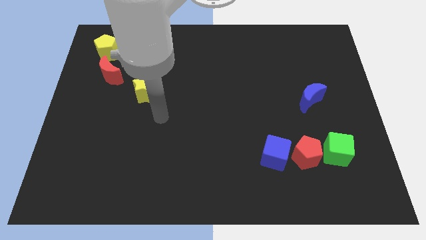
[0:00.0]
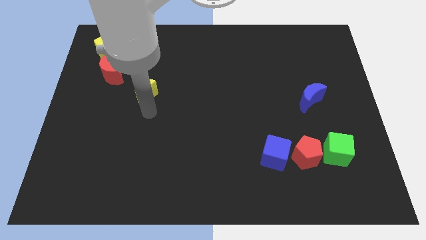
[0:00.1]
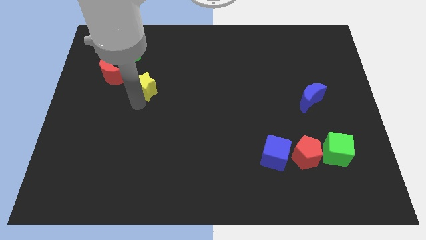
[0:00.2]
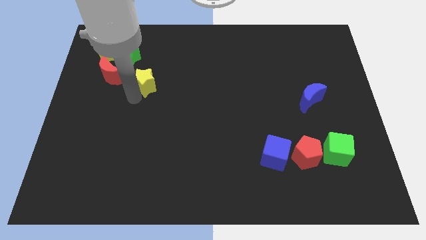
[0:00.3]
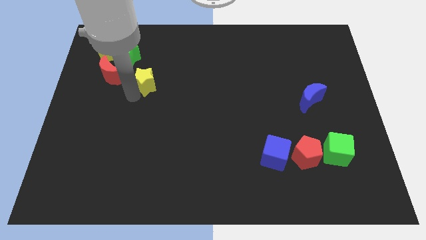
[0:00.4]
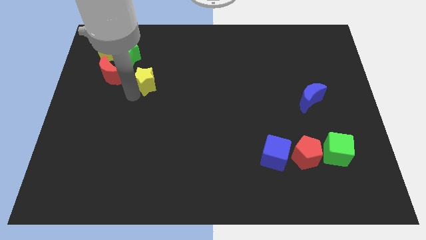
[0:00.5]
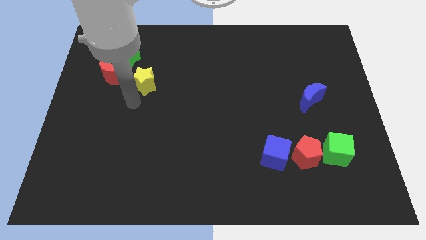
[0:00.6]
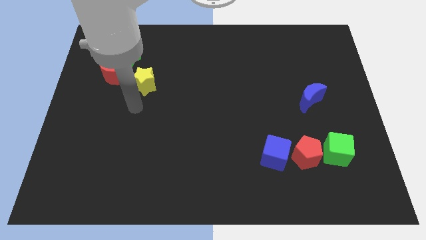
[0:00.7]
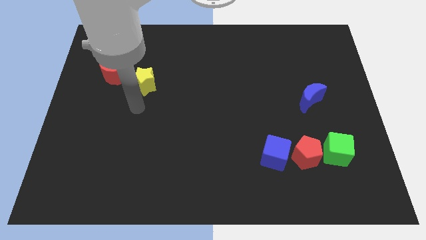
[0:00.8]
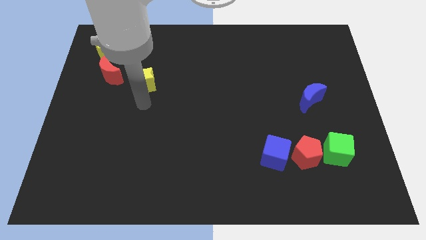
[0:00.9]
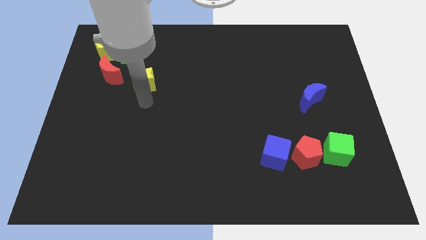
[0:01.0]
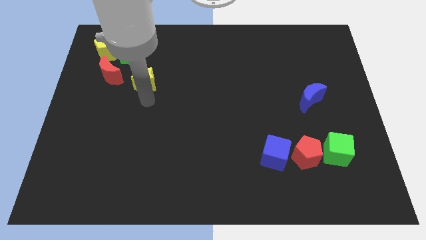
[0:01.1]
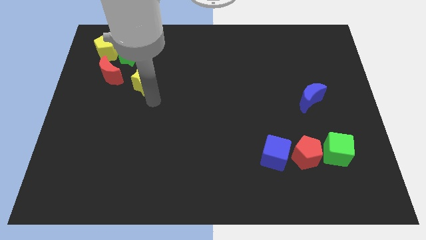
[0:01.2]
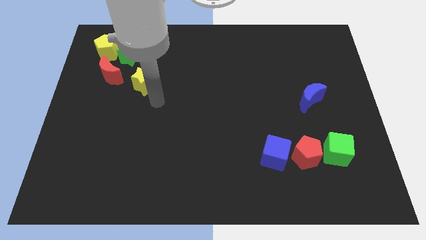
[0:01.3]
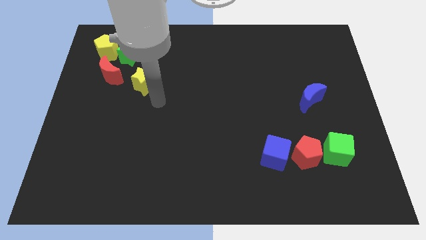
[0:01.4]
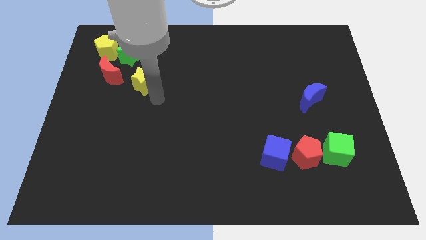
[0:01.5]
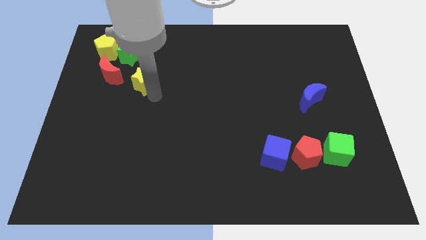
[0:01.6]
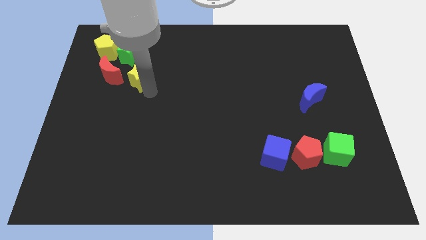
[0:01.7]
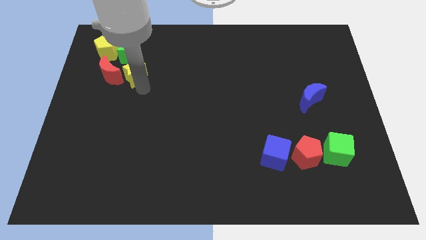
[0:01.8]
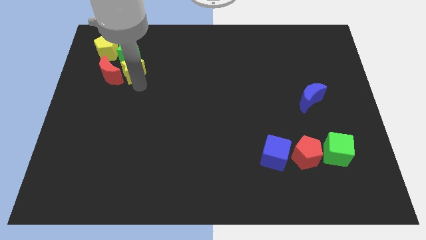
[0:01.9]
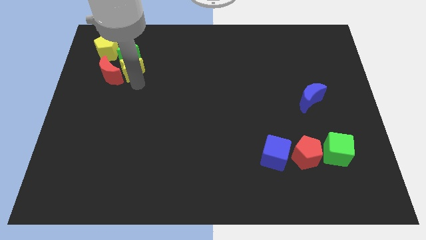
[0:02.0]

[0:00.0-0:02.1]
push the yellow star slightly towards the green star

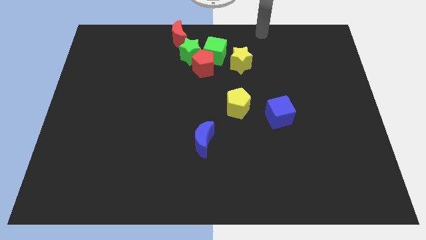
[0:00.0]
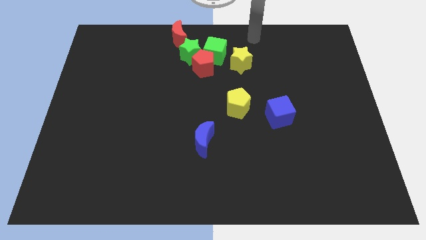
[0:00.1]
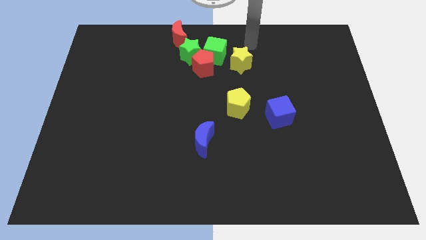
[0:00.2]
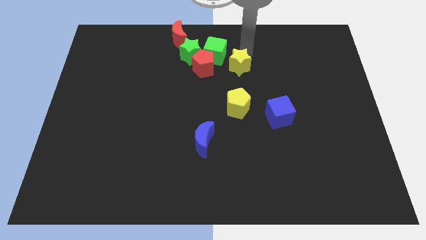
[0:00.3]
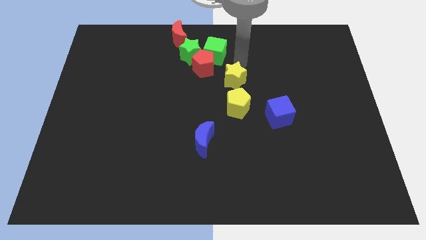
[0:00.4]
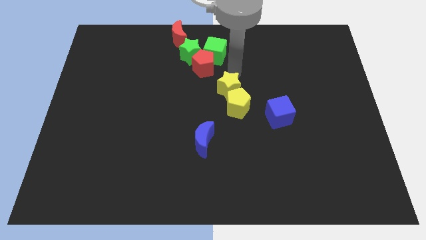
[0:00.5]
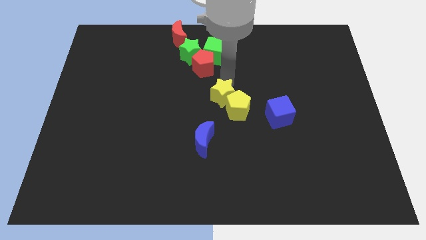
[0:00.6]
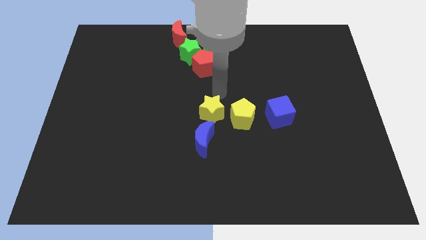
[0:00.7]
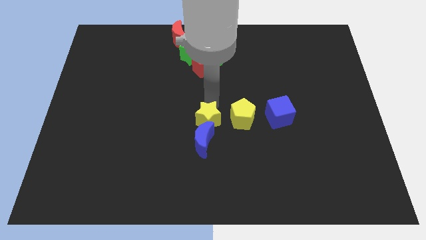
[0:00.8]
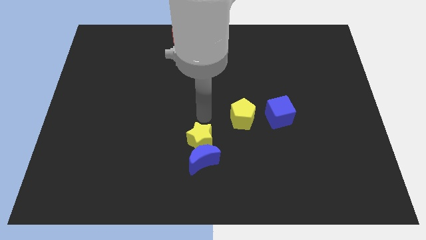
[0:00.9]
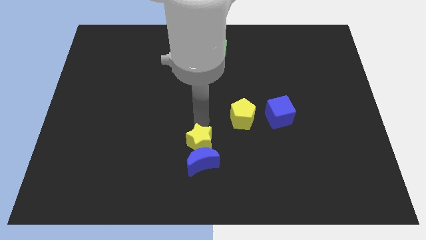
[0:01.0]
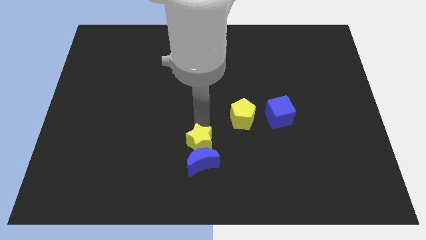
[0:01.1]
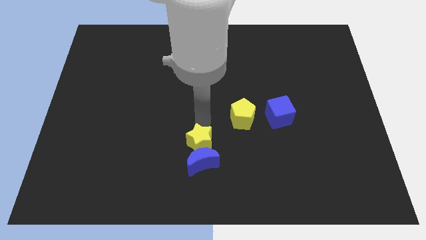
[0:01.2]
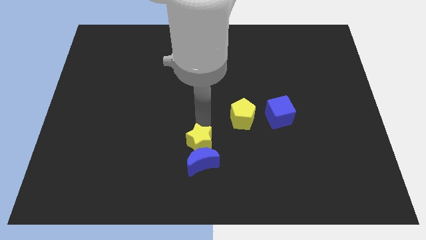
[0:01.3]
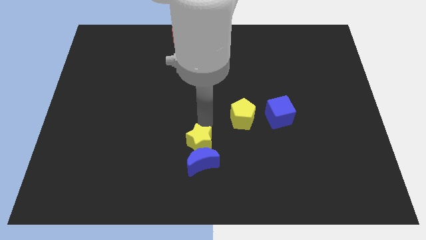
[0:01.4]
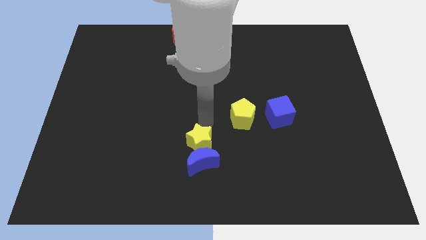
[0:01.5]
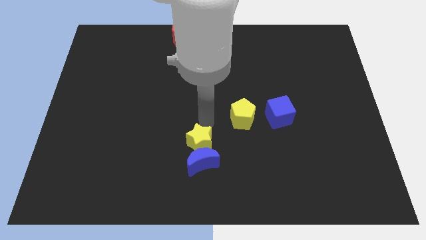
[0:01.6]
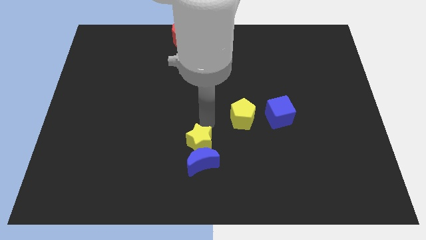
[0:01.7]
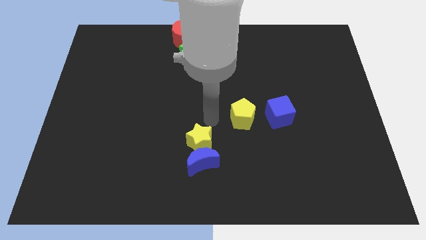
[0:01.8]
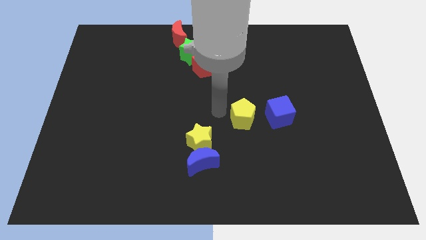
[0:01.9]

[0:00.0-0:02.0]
push the yellow star into the blue crescent

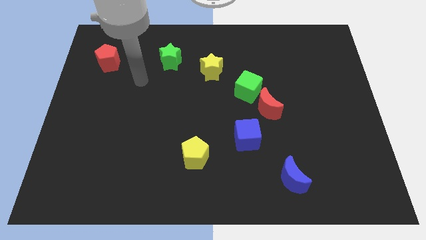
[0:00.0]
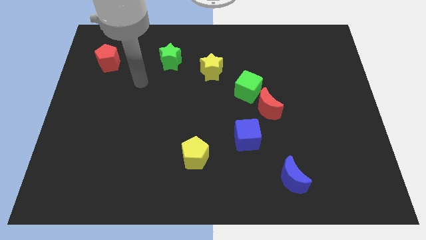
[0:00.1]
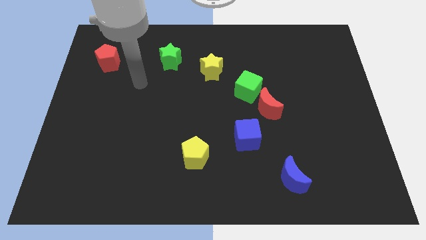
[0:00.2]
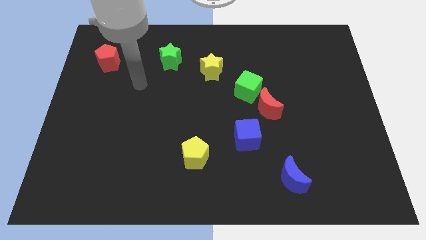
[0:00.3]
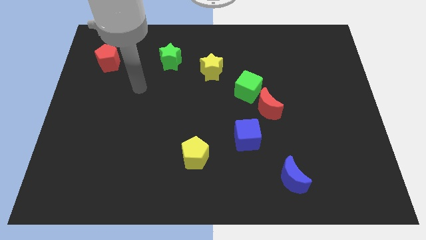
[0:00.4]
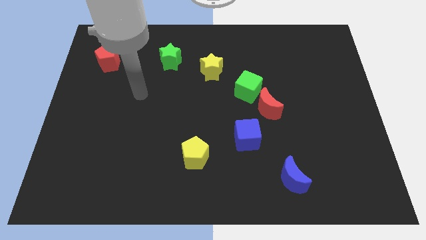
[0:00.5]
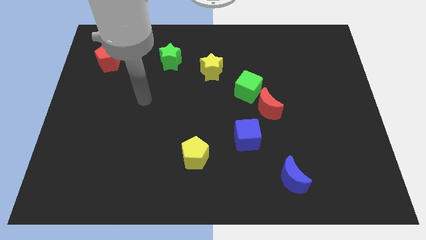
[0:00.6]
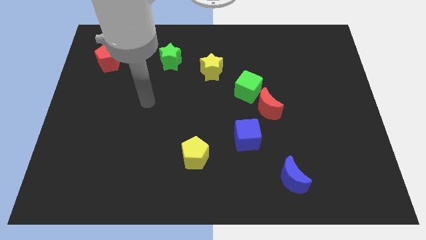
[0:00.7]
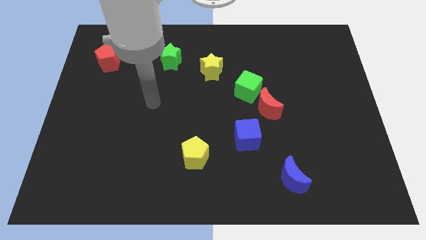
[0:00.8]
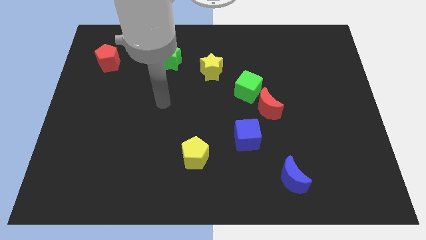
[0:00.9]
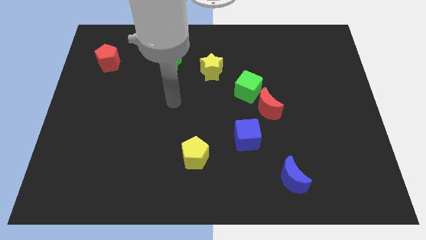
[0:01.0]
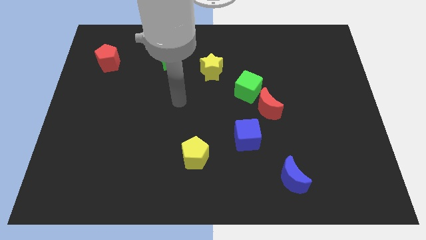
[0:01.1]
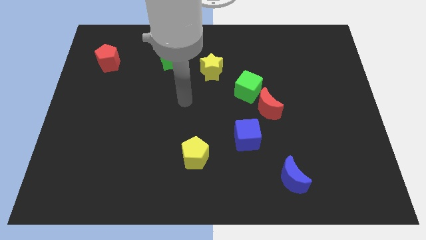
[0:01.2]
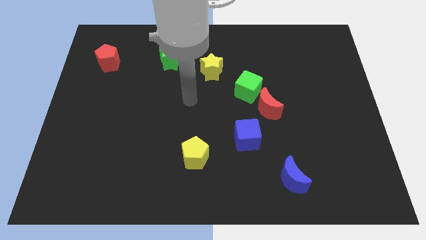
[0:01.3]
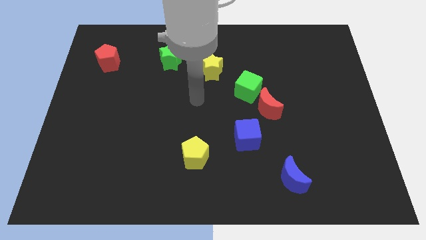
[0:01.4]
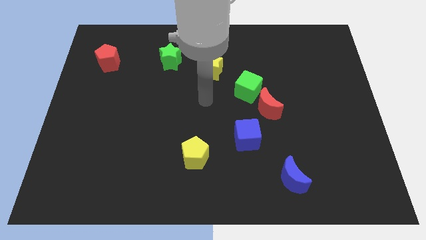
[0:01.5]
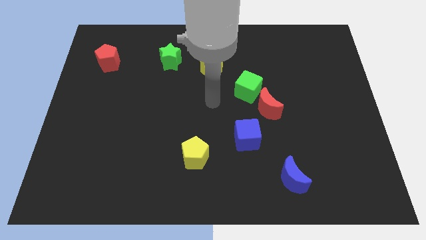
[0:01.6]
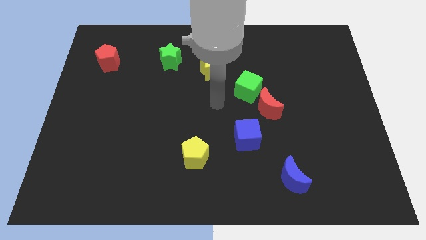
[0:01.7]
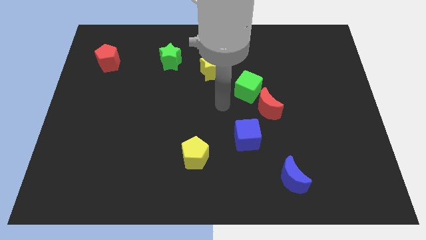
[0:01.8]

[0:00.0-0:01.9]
point your arm to the center

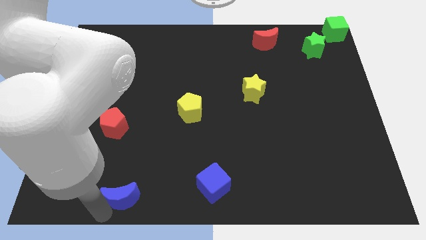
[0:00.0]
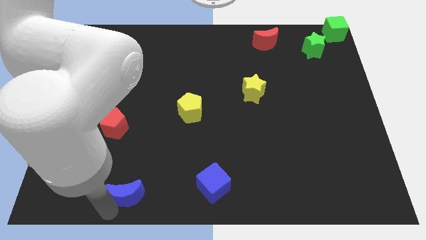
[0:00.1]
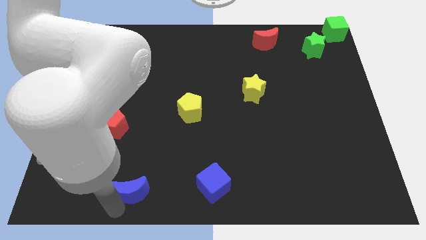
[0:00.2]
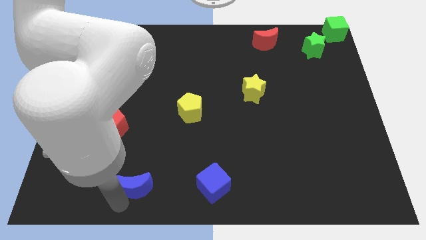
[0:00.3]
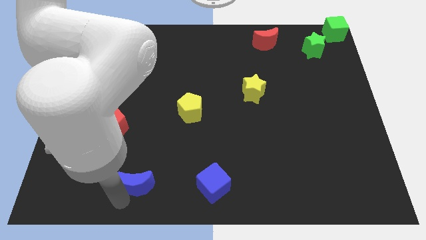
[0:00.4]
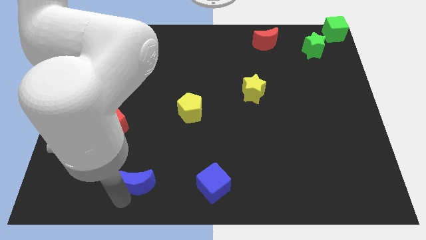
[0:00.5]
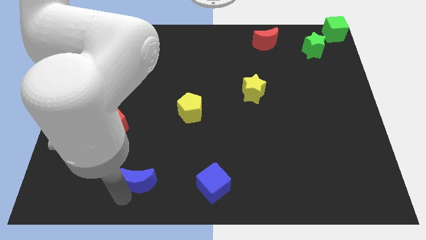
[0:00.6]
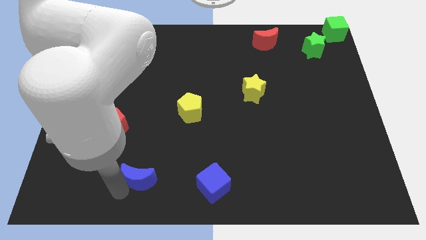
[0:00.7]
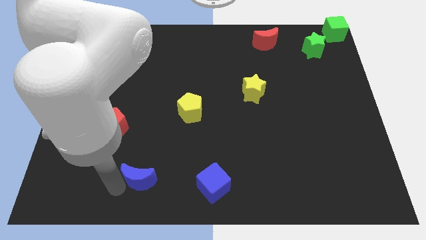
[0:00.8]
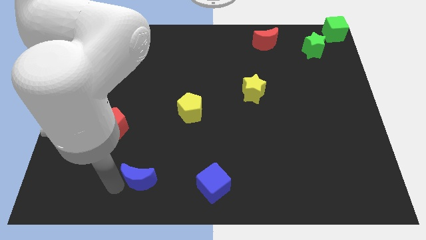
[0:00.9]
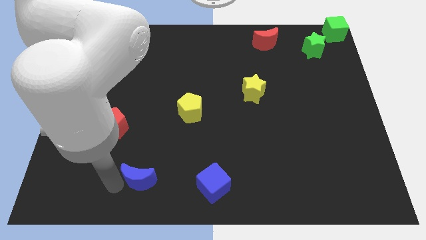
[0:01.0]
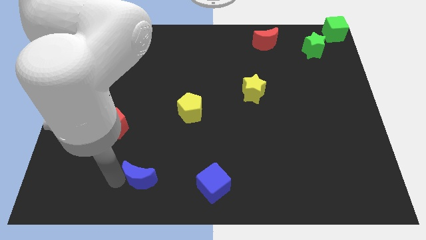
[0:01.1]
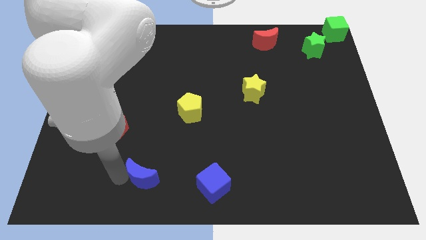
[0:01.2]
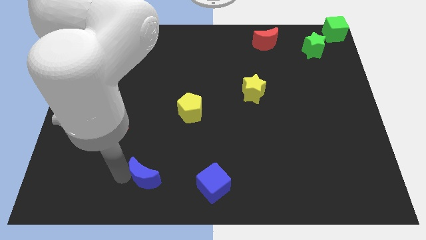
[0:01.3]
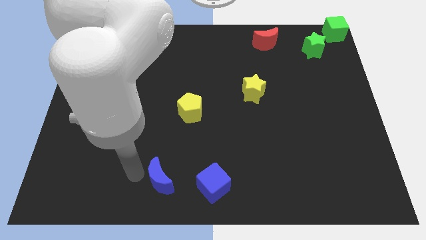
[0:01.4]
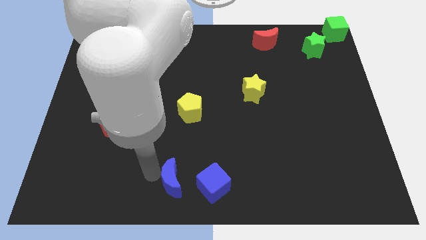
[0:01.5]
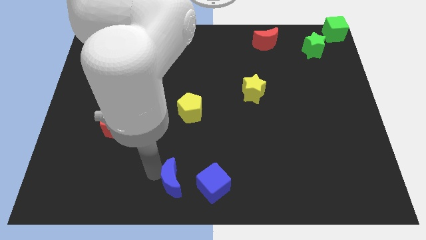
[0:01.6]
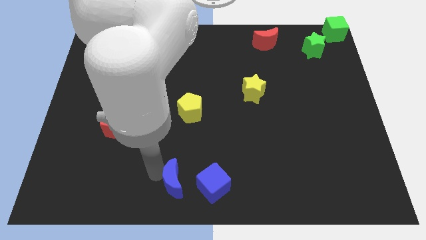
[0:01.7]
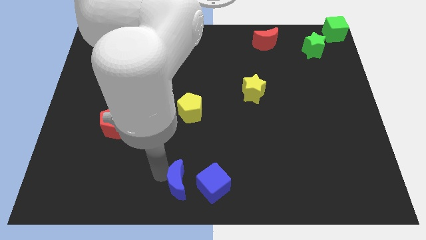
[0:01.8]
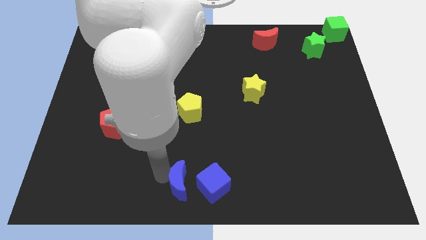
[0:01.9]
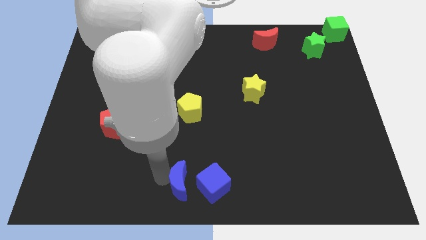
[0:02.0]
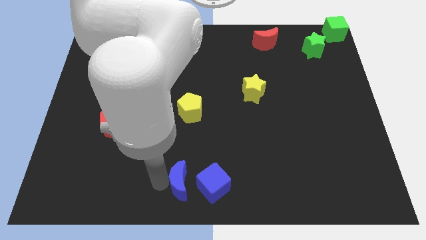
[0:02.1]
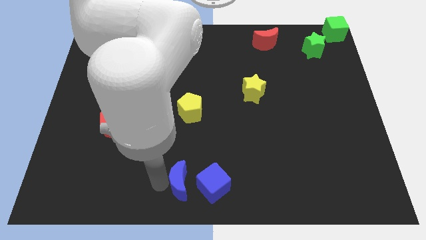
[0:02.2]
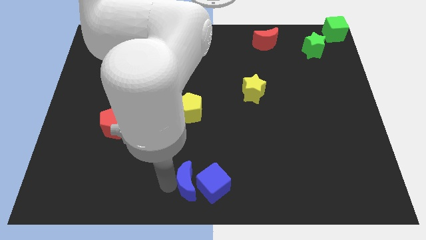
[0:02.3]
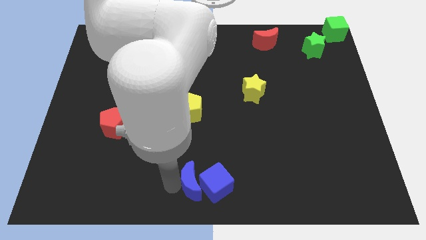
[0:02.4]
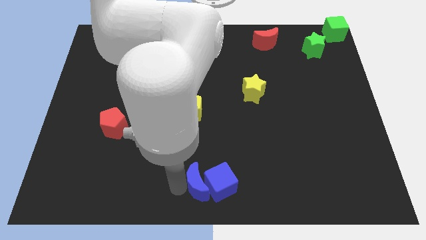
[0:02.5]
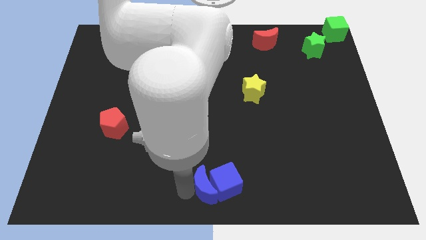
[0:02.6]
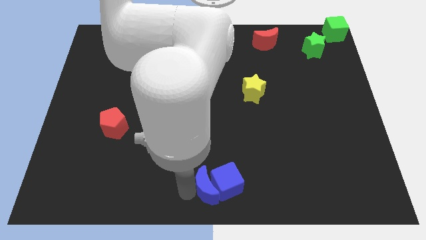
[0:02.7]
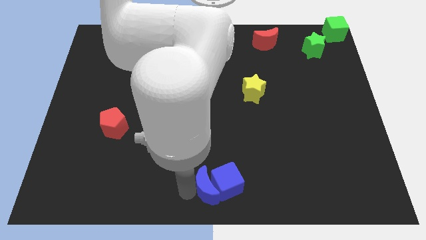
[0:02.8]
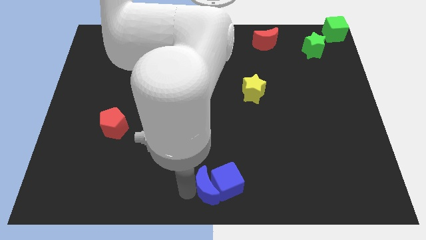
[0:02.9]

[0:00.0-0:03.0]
place the blue crescent and blue cube in bottom center of the board
